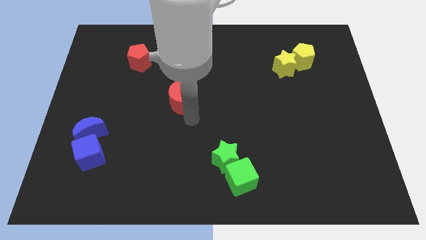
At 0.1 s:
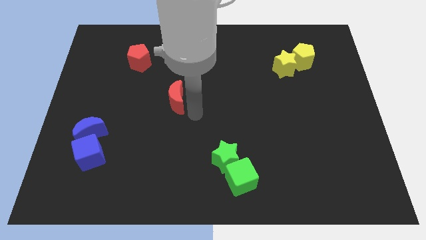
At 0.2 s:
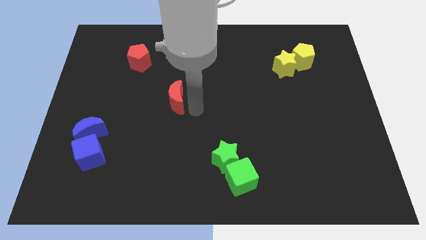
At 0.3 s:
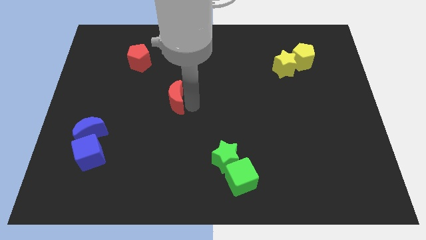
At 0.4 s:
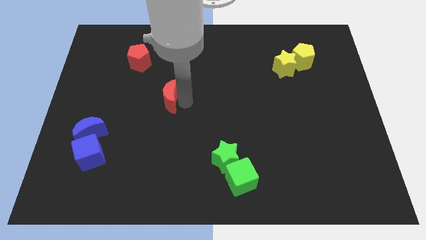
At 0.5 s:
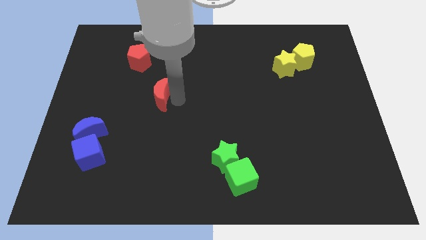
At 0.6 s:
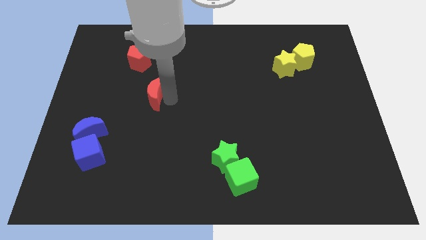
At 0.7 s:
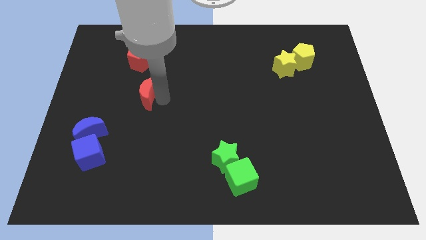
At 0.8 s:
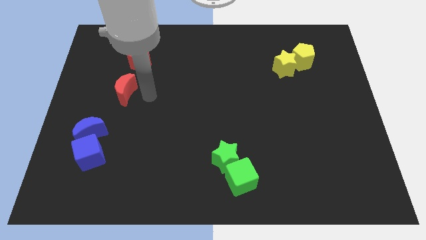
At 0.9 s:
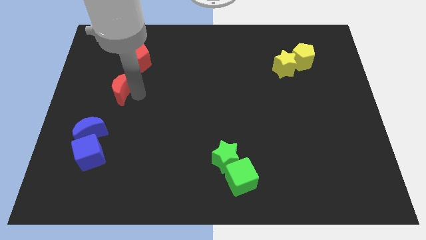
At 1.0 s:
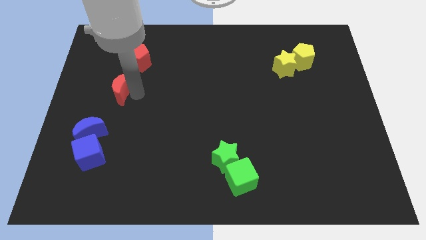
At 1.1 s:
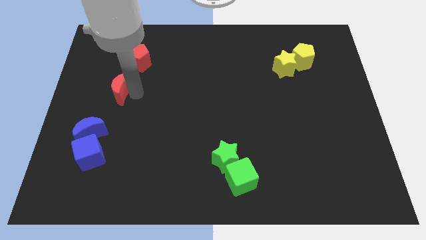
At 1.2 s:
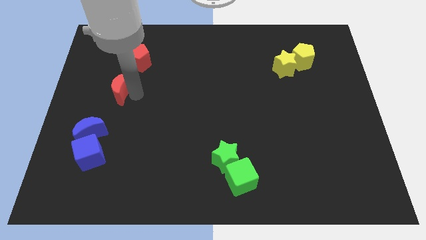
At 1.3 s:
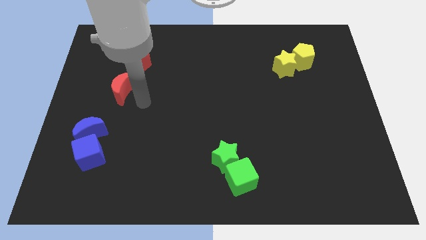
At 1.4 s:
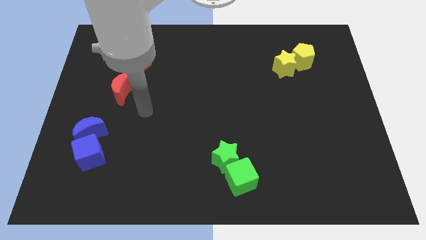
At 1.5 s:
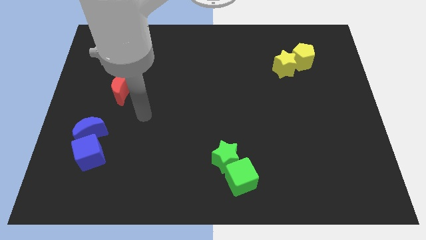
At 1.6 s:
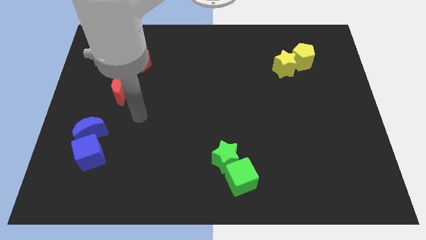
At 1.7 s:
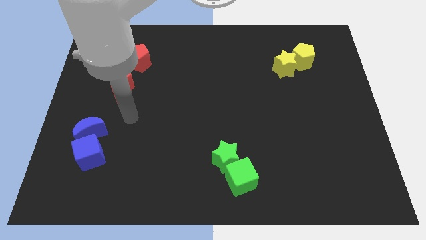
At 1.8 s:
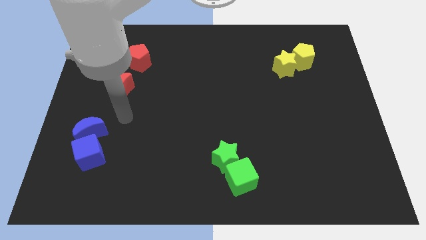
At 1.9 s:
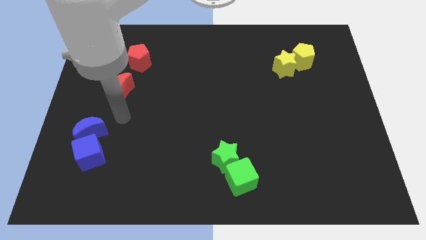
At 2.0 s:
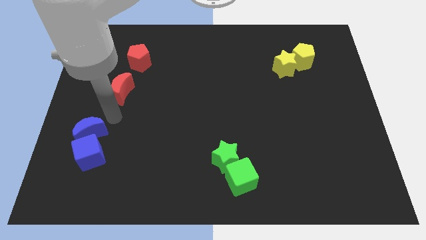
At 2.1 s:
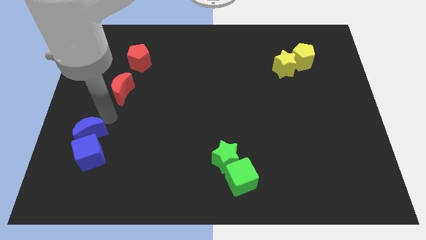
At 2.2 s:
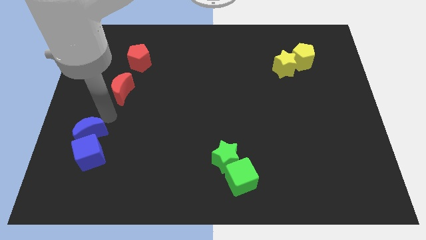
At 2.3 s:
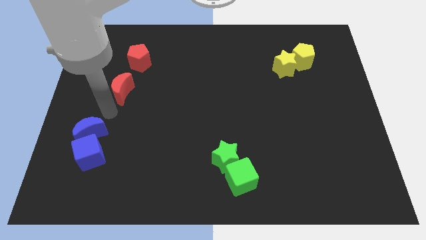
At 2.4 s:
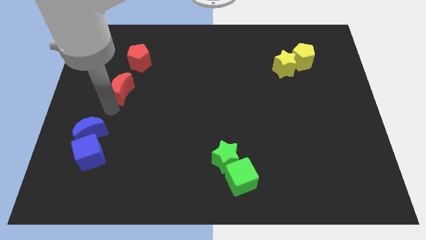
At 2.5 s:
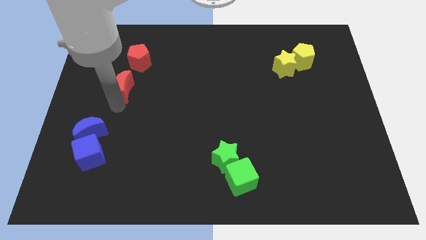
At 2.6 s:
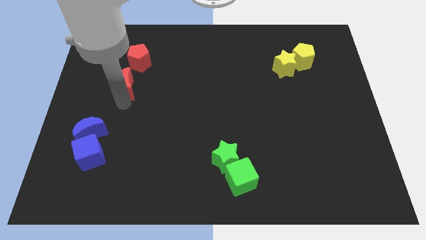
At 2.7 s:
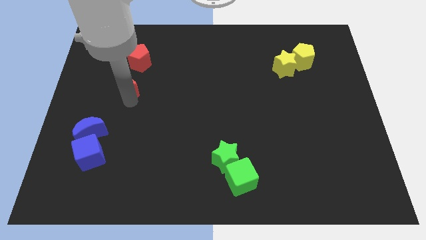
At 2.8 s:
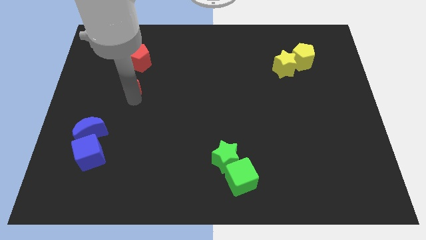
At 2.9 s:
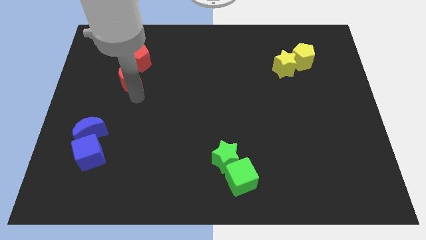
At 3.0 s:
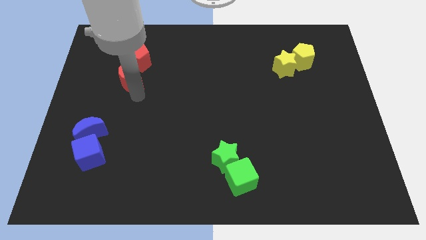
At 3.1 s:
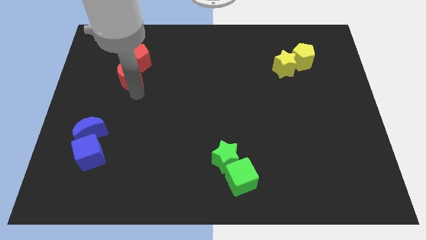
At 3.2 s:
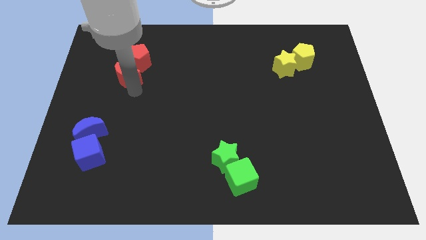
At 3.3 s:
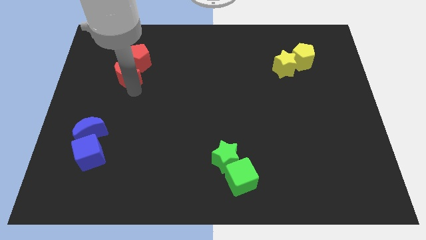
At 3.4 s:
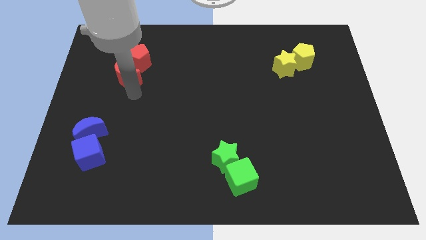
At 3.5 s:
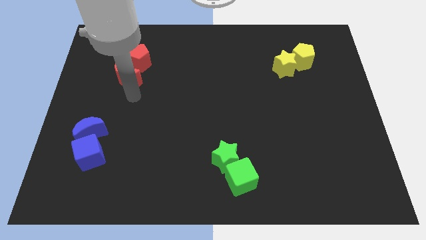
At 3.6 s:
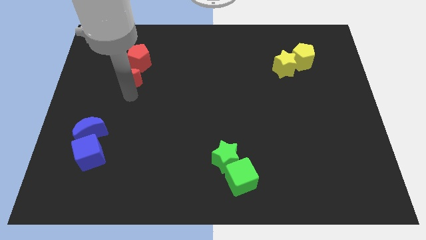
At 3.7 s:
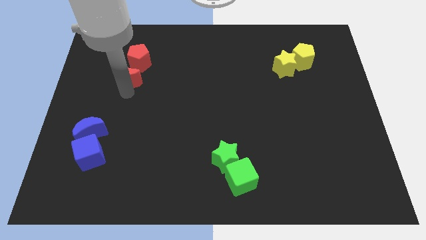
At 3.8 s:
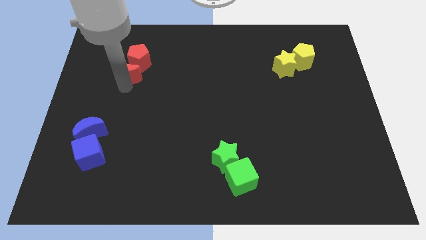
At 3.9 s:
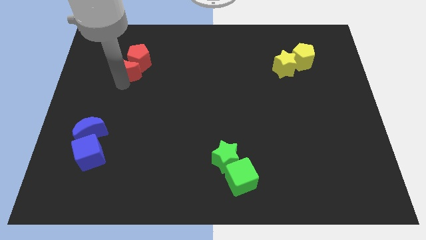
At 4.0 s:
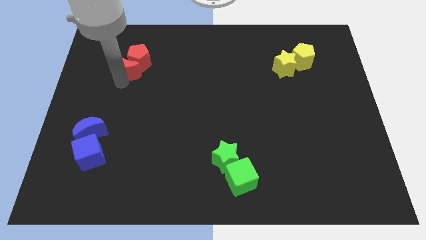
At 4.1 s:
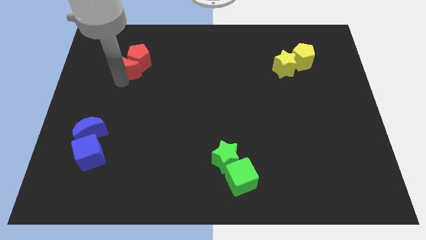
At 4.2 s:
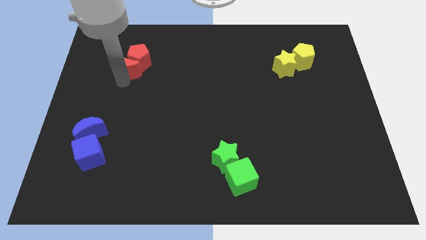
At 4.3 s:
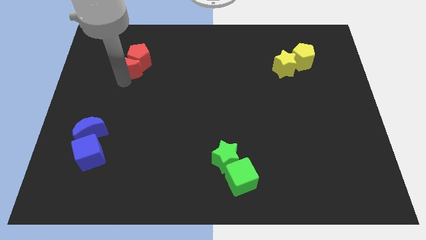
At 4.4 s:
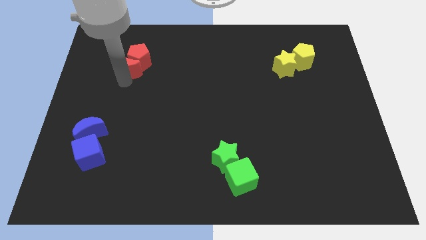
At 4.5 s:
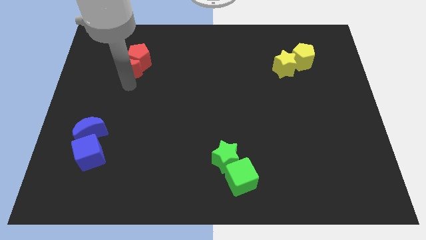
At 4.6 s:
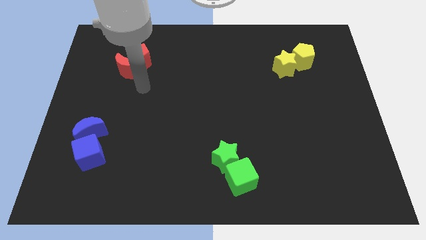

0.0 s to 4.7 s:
move the red crescent into the red pentagon

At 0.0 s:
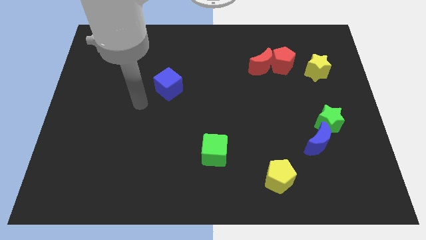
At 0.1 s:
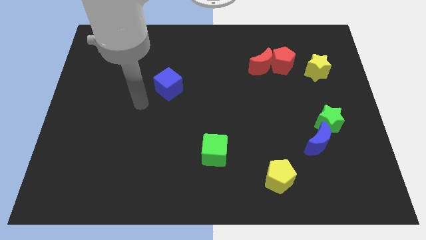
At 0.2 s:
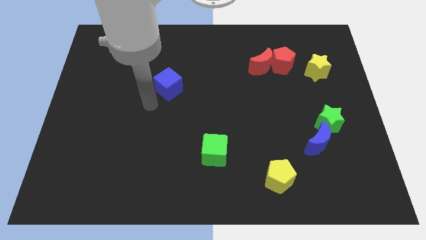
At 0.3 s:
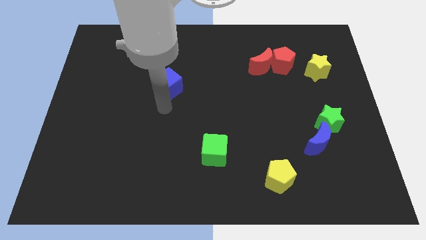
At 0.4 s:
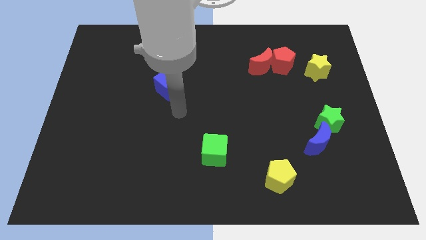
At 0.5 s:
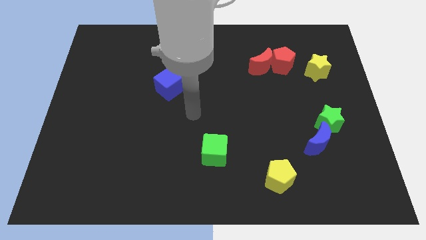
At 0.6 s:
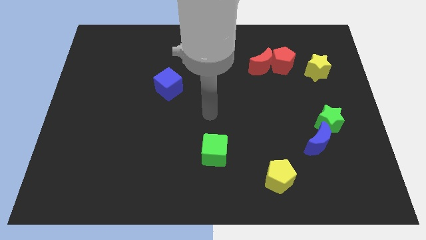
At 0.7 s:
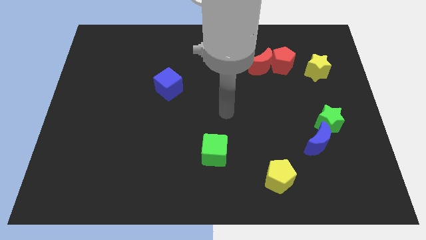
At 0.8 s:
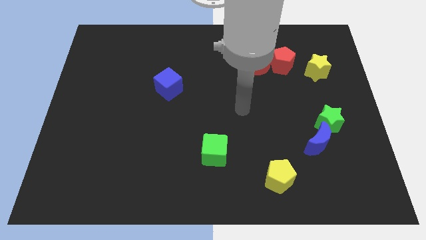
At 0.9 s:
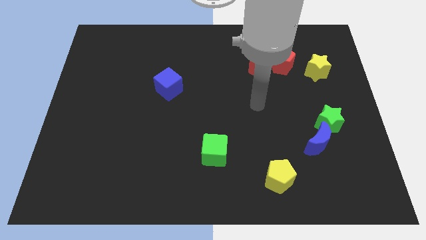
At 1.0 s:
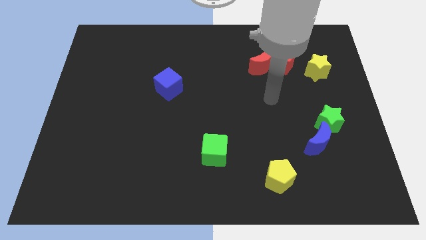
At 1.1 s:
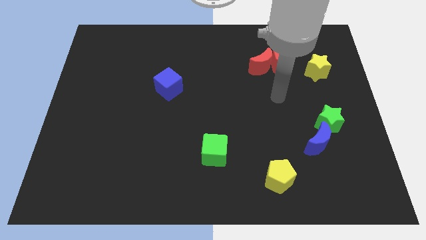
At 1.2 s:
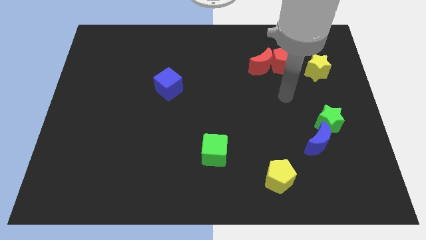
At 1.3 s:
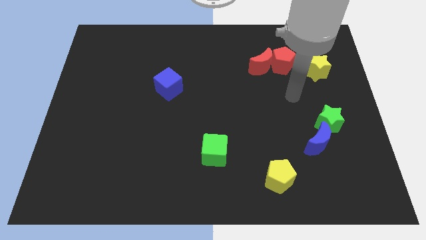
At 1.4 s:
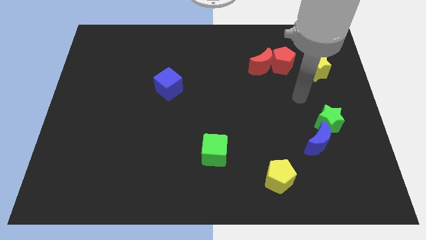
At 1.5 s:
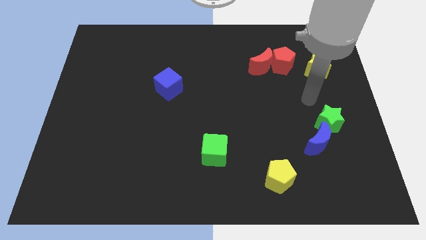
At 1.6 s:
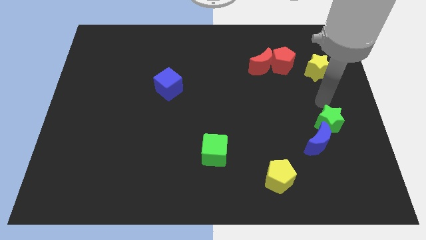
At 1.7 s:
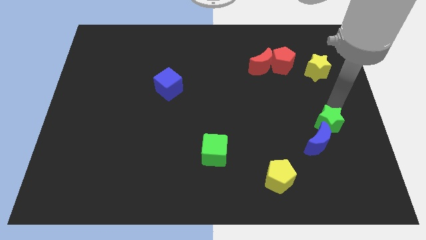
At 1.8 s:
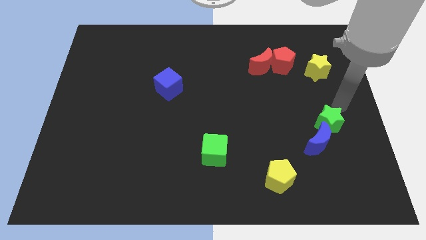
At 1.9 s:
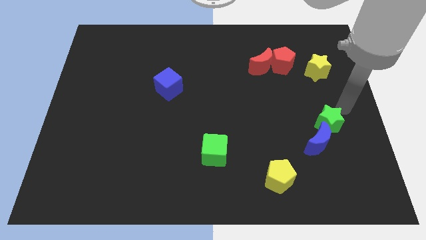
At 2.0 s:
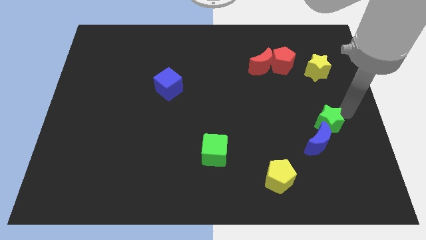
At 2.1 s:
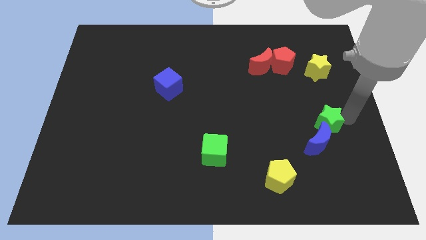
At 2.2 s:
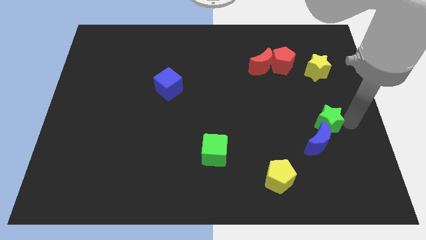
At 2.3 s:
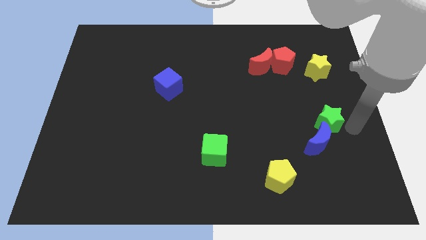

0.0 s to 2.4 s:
move the arm near the green star

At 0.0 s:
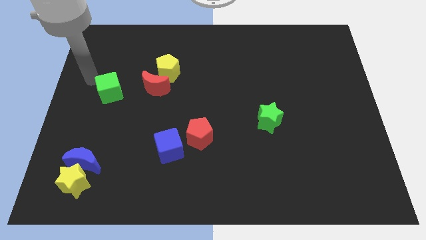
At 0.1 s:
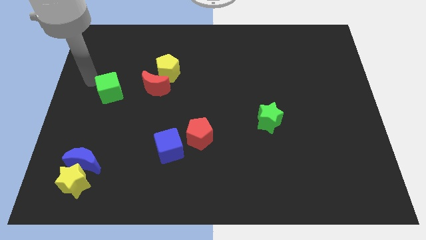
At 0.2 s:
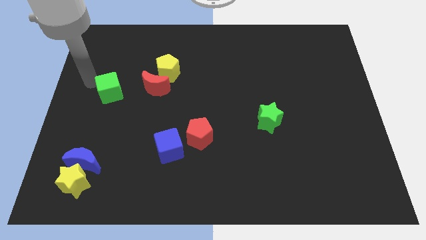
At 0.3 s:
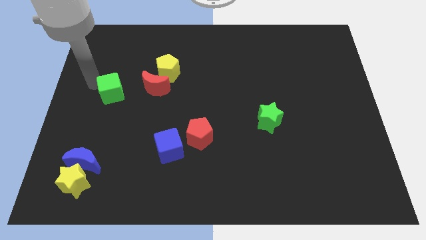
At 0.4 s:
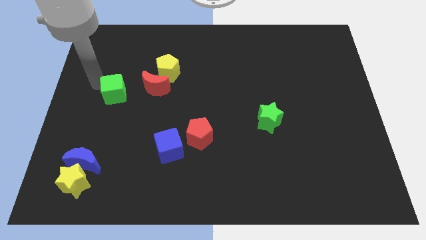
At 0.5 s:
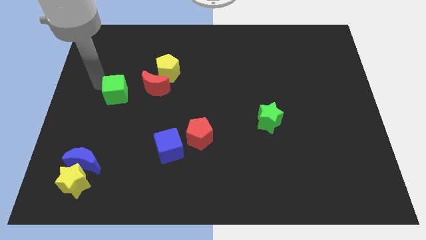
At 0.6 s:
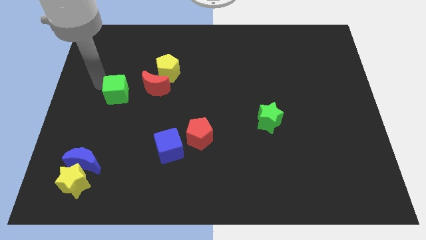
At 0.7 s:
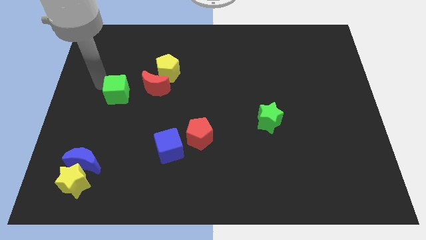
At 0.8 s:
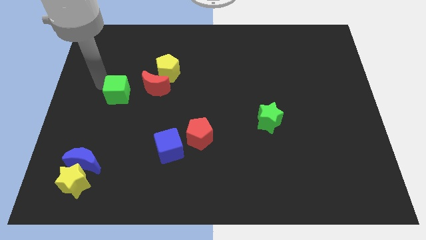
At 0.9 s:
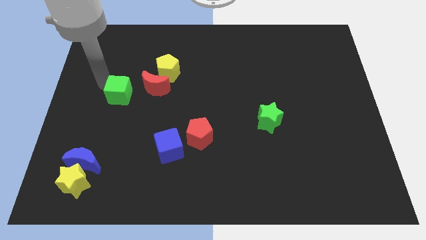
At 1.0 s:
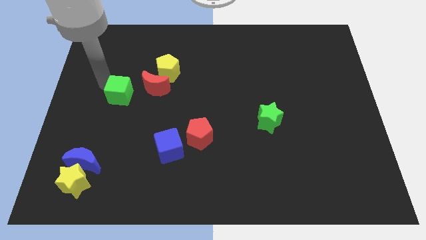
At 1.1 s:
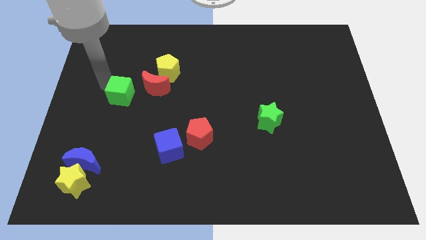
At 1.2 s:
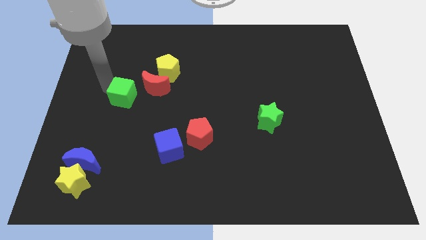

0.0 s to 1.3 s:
slightly push the green cube towards the right of the board

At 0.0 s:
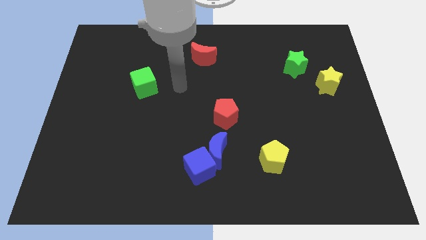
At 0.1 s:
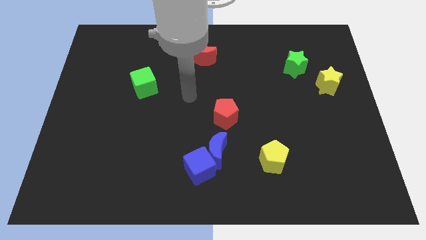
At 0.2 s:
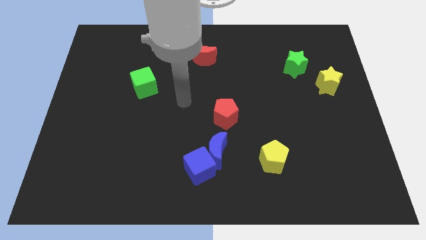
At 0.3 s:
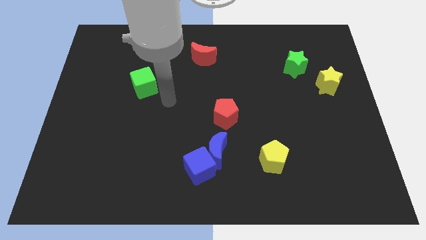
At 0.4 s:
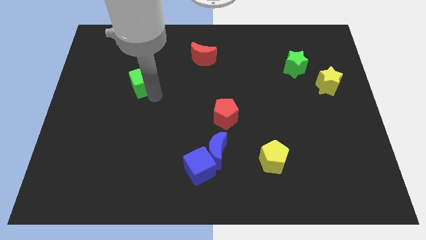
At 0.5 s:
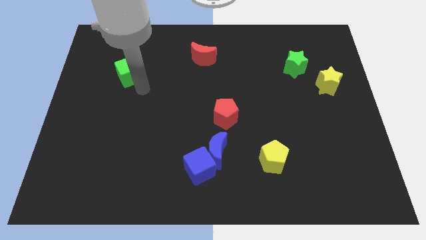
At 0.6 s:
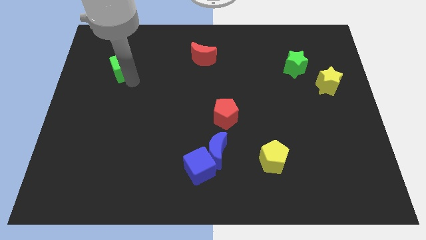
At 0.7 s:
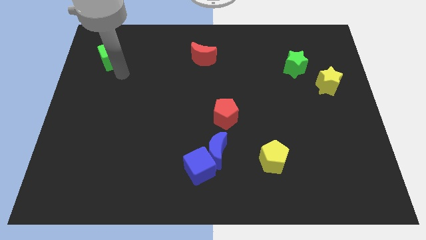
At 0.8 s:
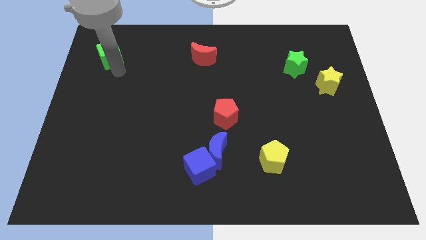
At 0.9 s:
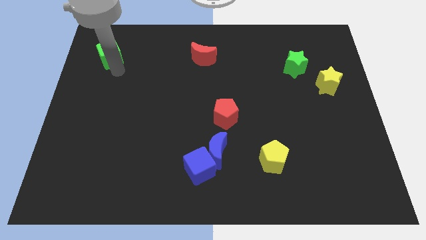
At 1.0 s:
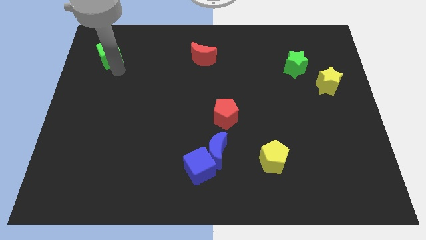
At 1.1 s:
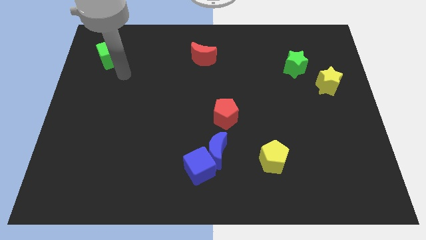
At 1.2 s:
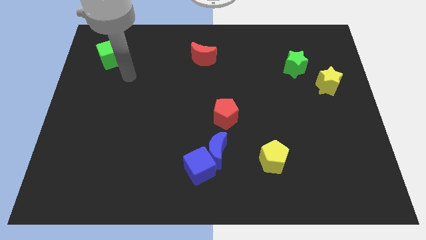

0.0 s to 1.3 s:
push the green cube to the left of the red crescent
